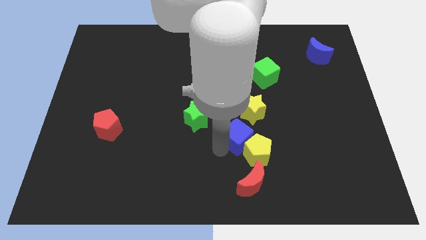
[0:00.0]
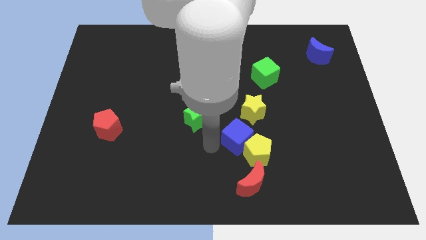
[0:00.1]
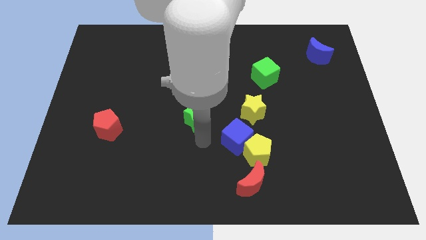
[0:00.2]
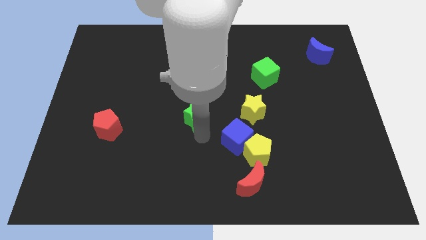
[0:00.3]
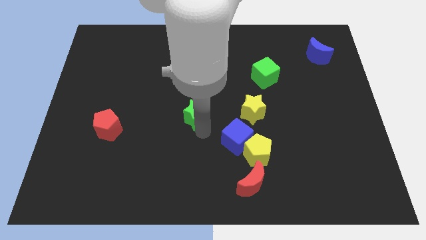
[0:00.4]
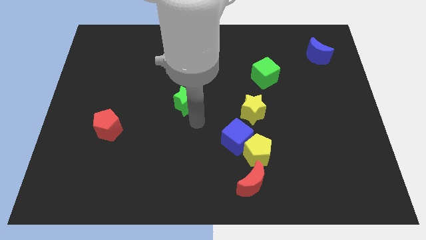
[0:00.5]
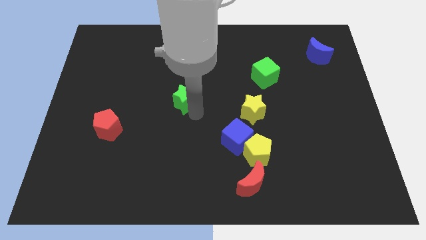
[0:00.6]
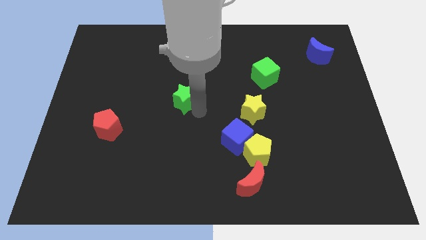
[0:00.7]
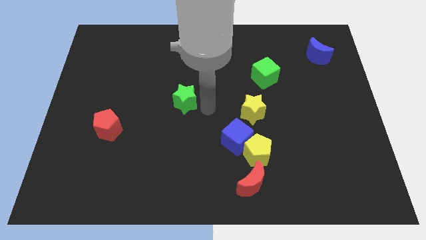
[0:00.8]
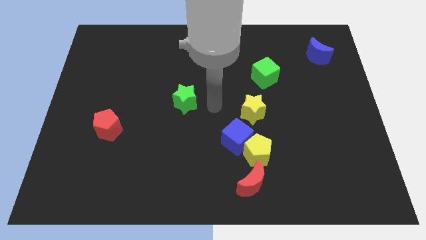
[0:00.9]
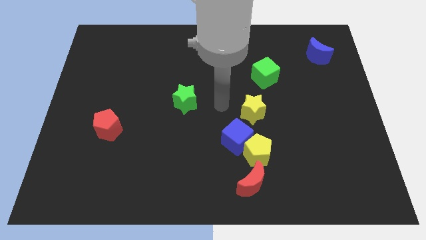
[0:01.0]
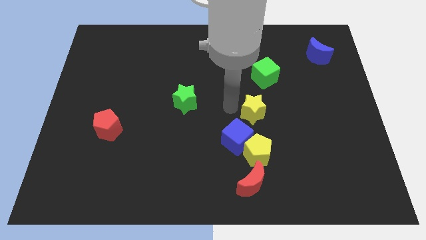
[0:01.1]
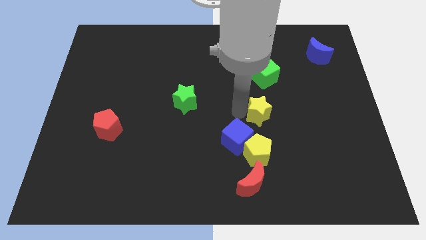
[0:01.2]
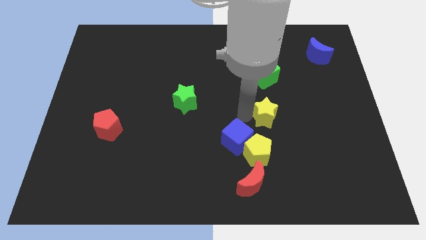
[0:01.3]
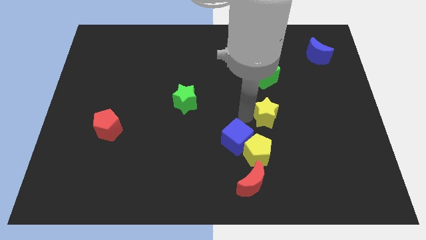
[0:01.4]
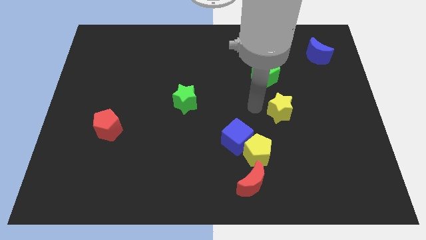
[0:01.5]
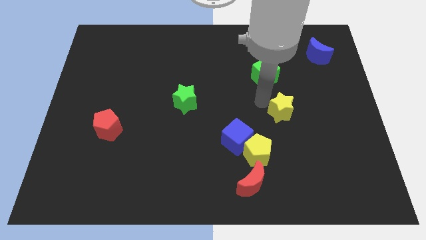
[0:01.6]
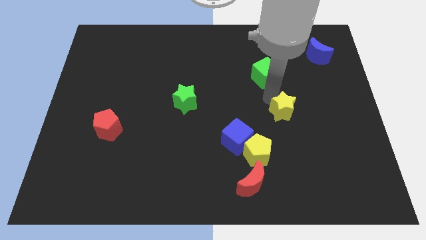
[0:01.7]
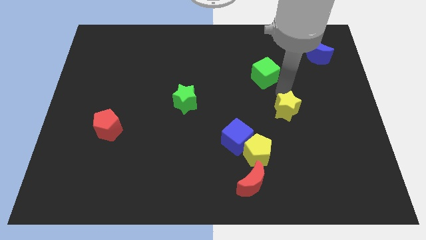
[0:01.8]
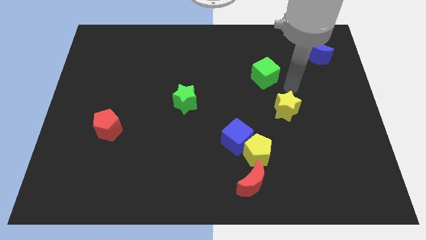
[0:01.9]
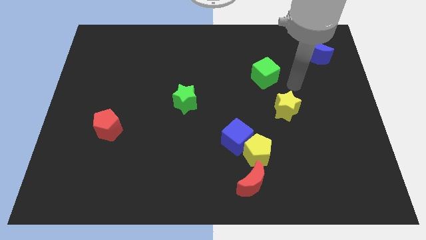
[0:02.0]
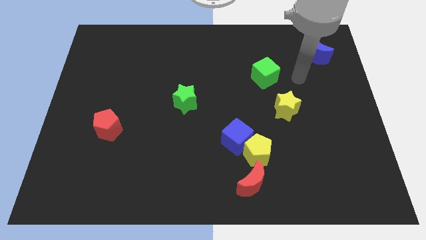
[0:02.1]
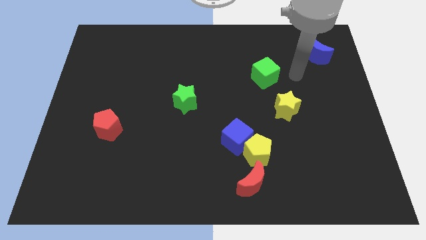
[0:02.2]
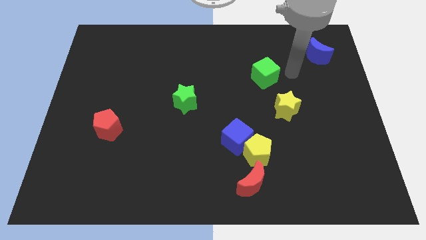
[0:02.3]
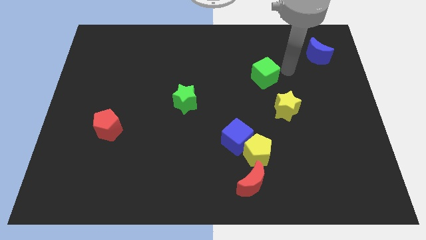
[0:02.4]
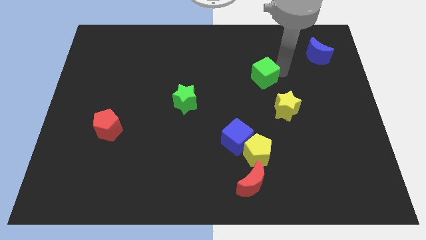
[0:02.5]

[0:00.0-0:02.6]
move the yellow star to the bottom right of the green cube

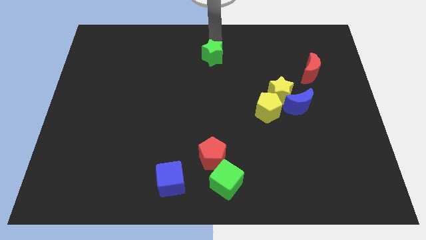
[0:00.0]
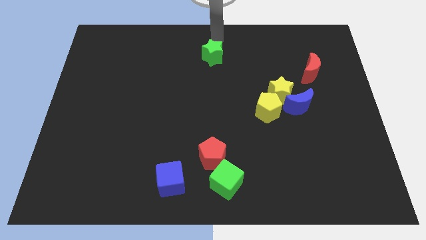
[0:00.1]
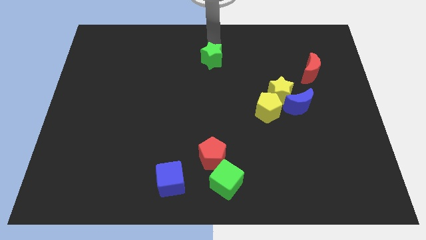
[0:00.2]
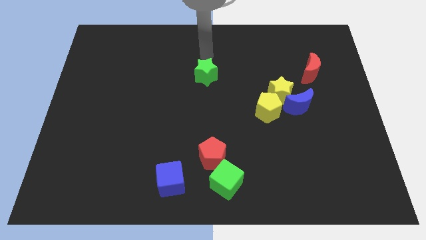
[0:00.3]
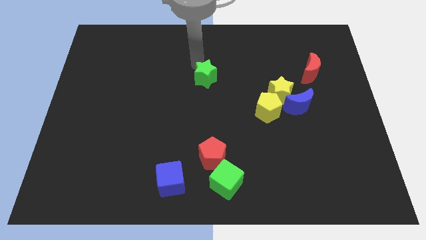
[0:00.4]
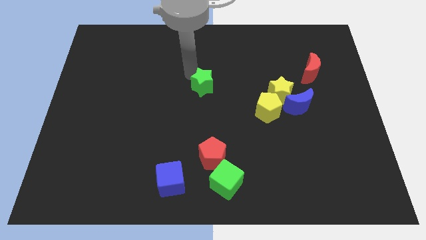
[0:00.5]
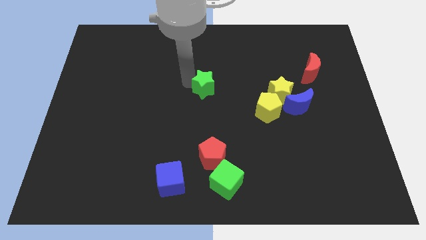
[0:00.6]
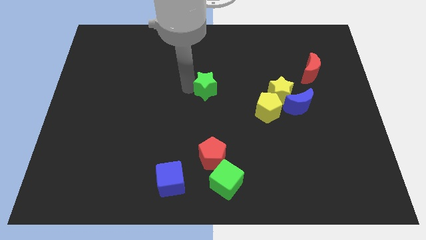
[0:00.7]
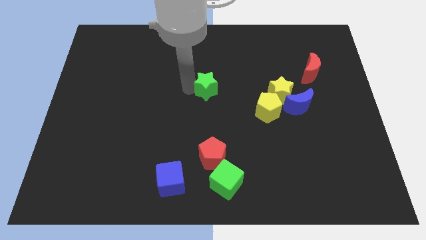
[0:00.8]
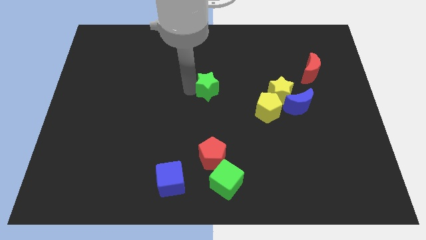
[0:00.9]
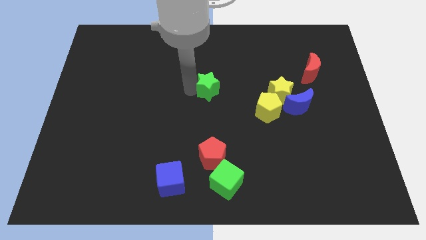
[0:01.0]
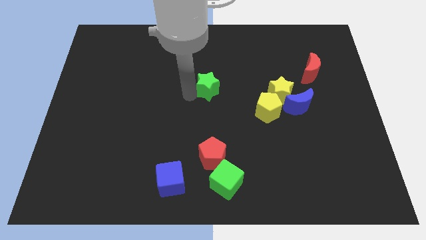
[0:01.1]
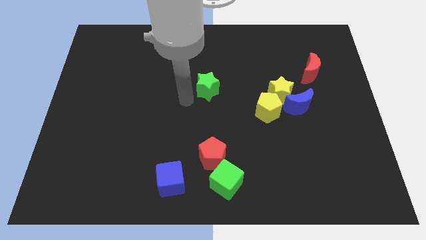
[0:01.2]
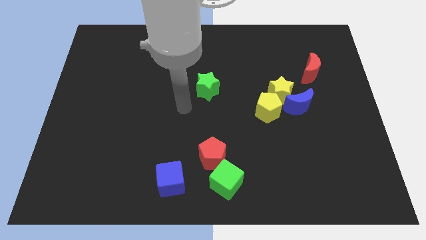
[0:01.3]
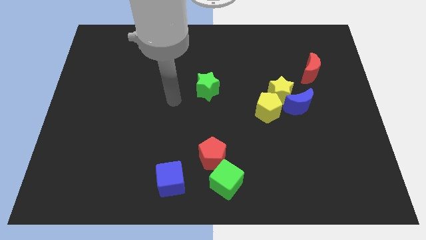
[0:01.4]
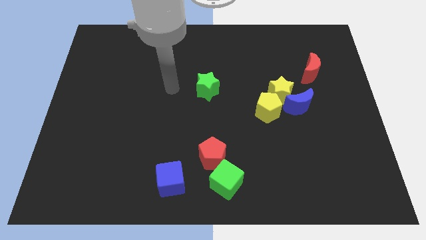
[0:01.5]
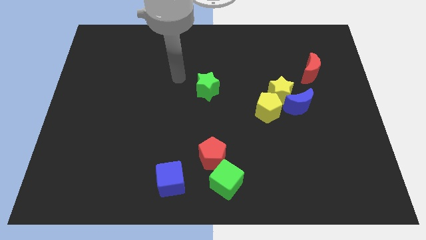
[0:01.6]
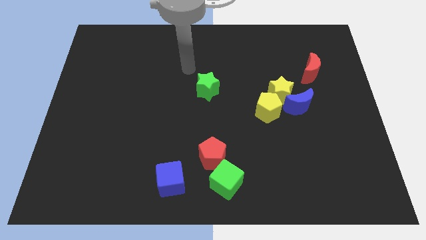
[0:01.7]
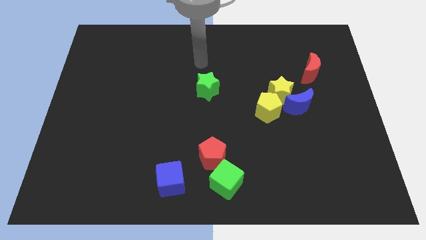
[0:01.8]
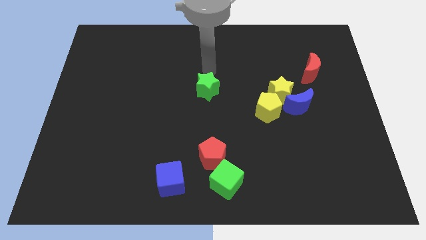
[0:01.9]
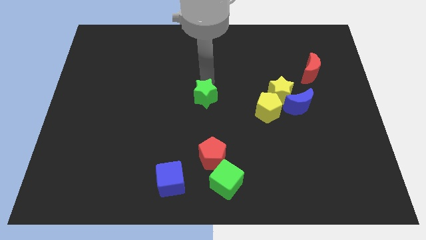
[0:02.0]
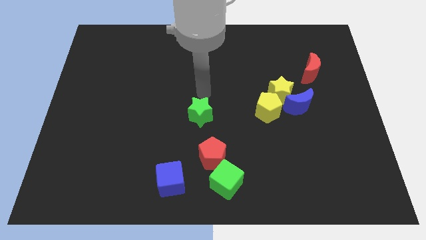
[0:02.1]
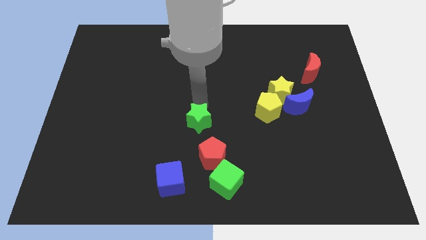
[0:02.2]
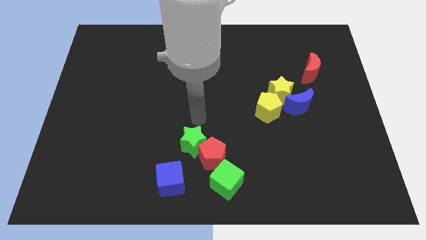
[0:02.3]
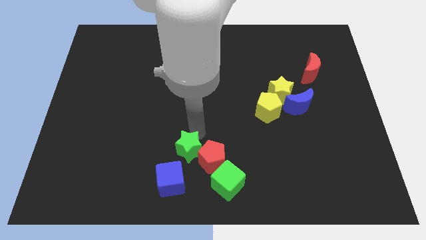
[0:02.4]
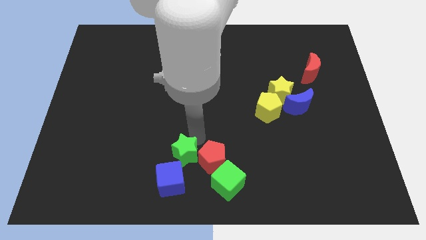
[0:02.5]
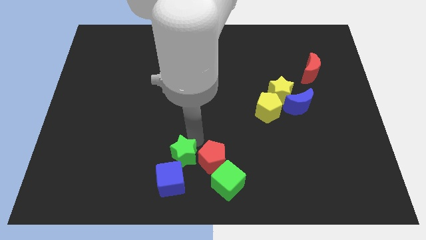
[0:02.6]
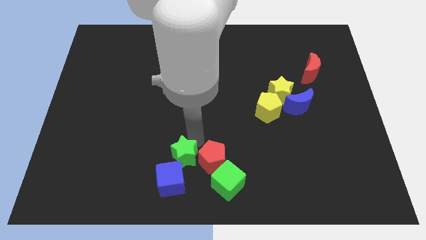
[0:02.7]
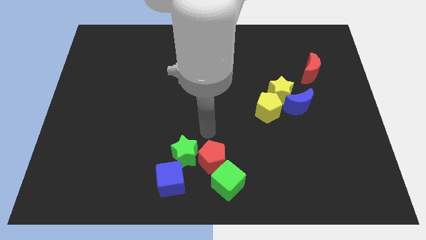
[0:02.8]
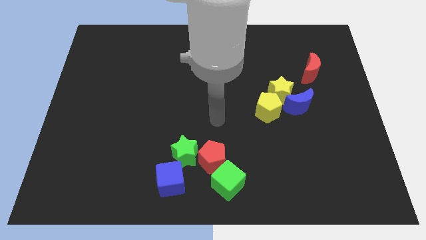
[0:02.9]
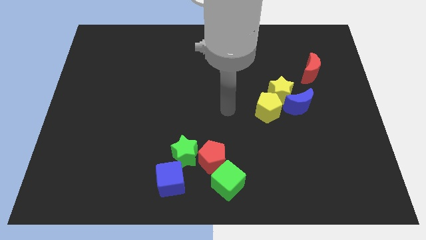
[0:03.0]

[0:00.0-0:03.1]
place green star left to red pentagon

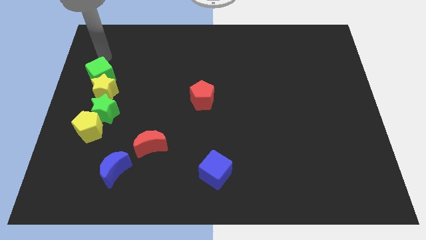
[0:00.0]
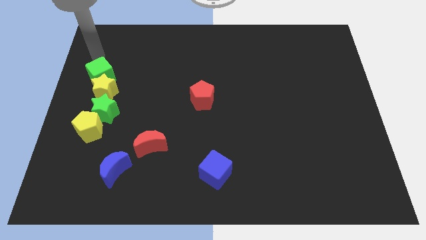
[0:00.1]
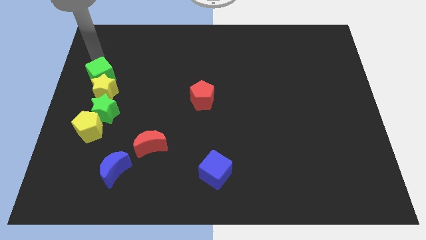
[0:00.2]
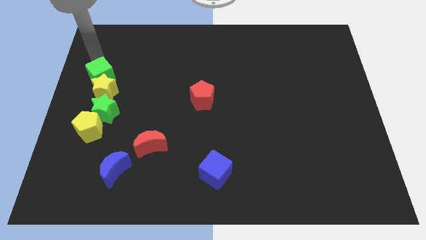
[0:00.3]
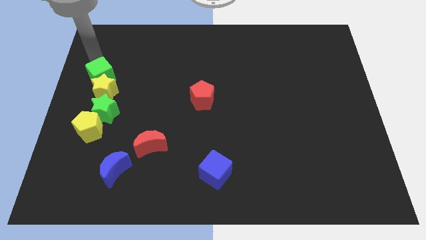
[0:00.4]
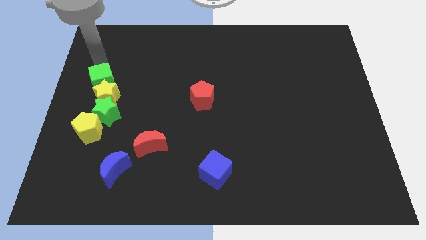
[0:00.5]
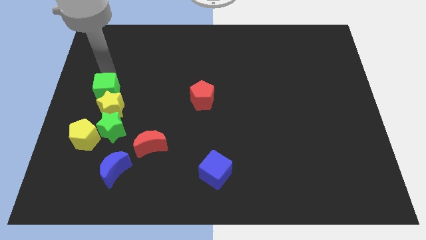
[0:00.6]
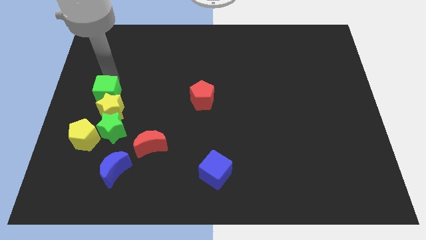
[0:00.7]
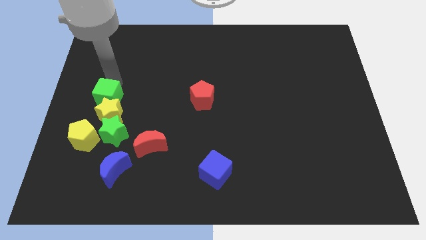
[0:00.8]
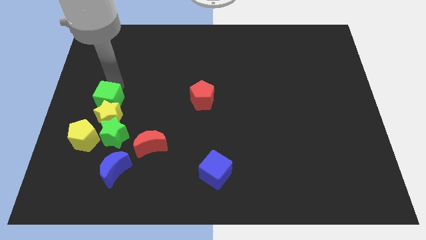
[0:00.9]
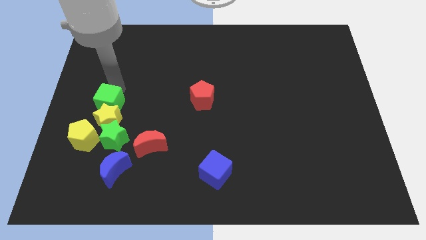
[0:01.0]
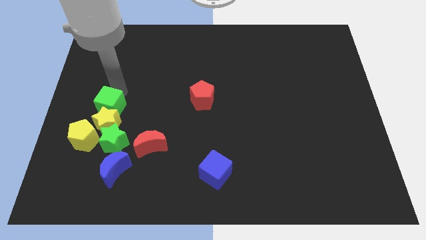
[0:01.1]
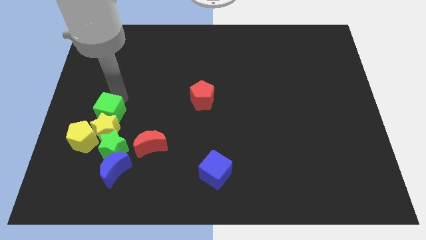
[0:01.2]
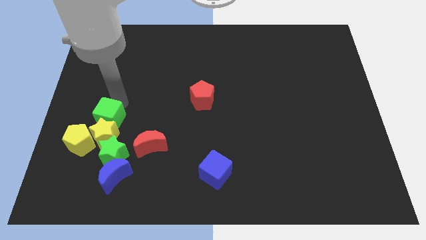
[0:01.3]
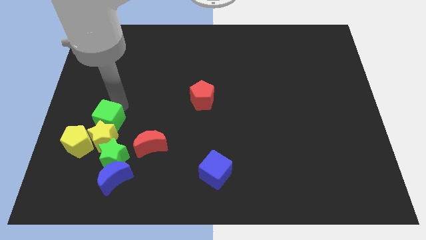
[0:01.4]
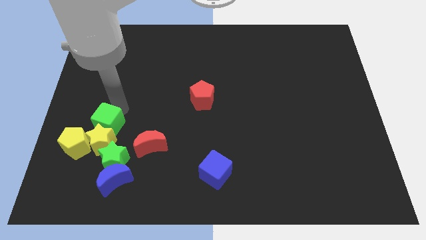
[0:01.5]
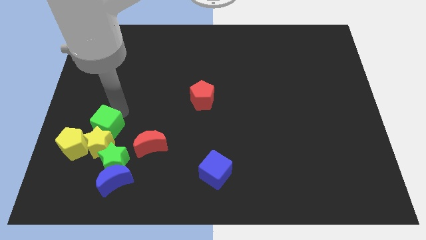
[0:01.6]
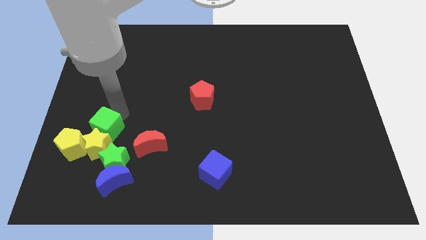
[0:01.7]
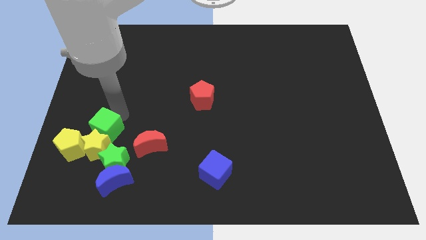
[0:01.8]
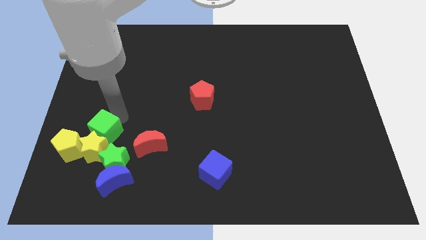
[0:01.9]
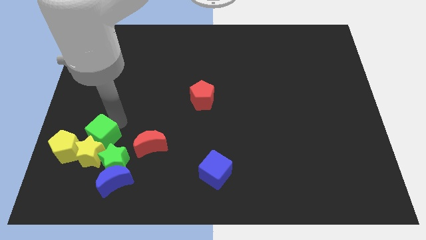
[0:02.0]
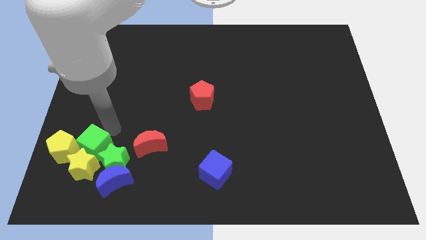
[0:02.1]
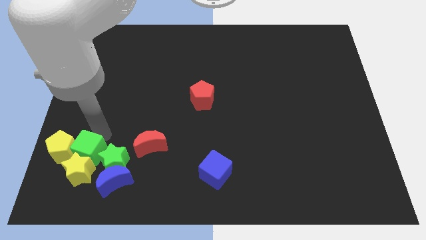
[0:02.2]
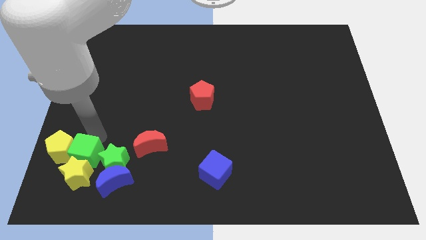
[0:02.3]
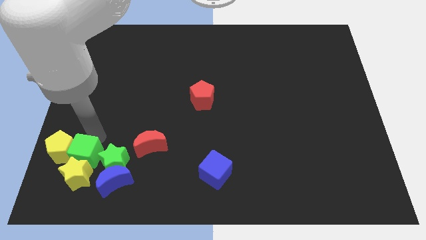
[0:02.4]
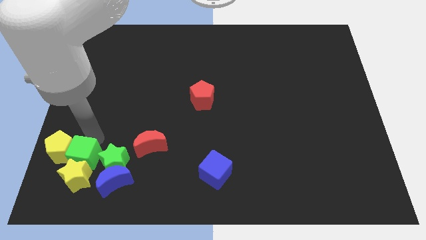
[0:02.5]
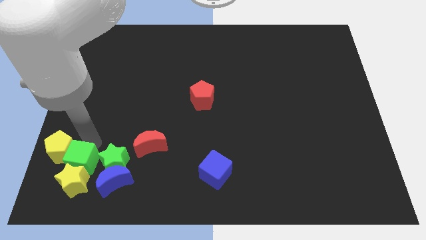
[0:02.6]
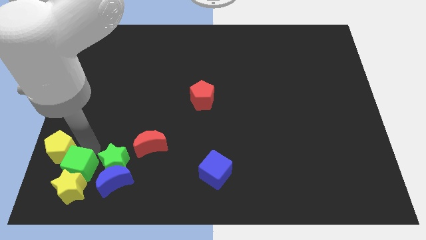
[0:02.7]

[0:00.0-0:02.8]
push two stars with green block

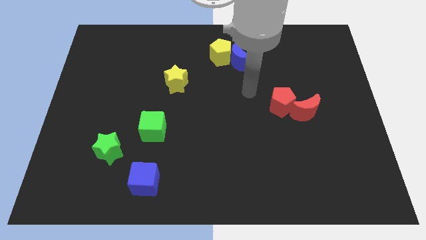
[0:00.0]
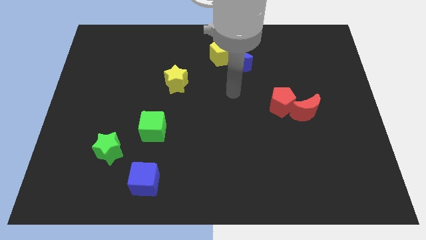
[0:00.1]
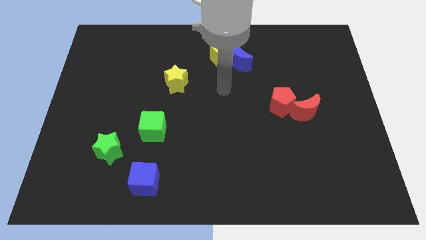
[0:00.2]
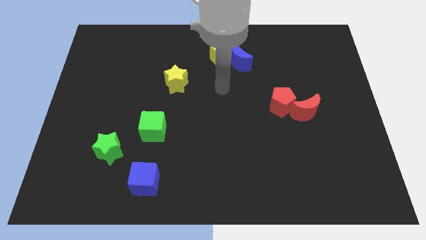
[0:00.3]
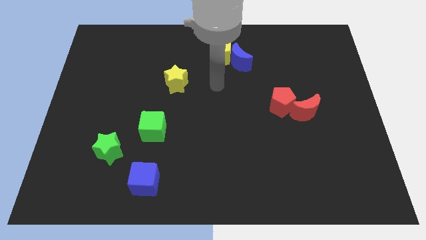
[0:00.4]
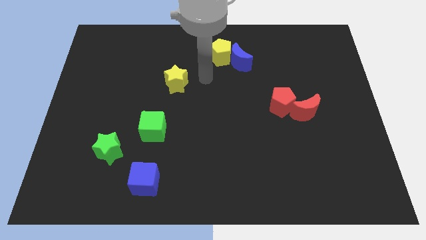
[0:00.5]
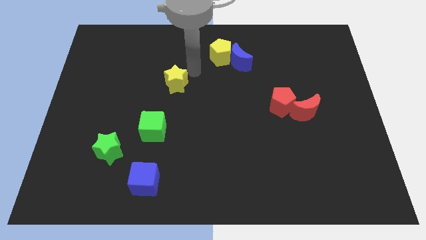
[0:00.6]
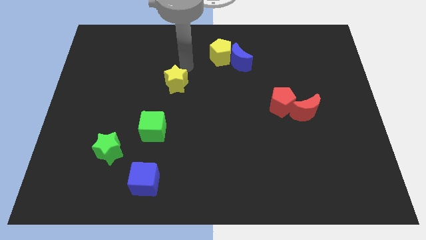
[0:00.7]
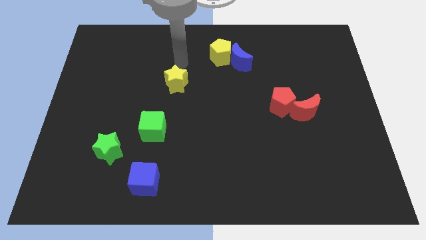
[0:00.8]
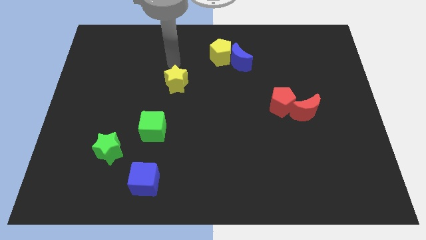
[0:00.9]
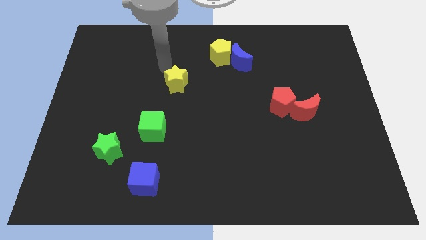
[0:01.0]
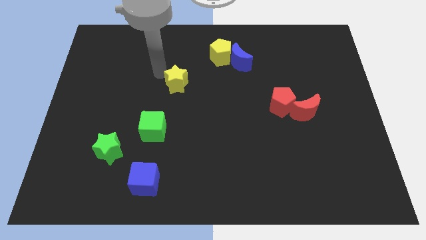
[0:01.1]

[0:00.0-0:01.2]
move arm to the top of yellow star
